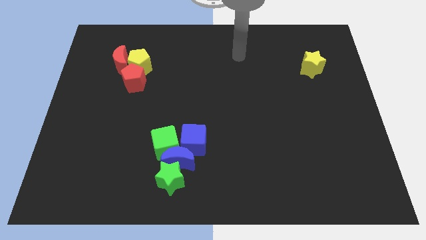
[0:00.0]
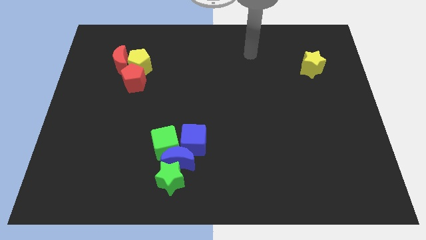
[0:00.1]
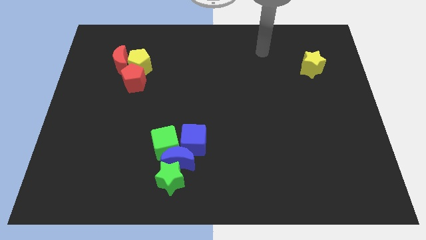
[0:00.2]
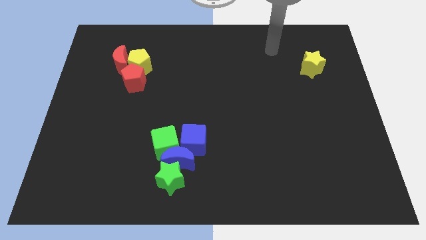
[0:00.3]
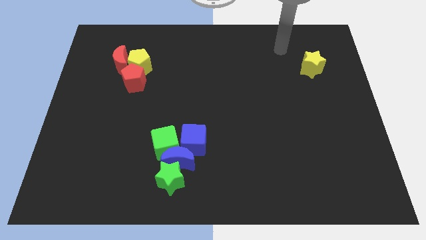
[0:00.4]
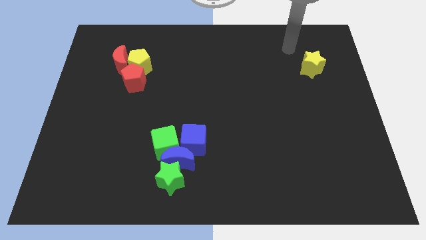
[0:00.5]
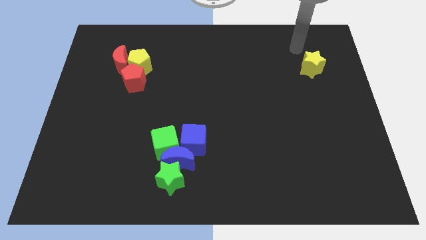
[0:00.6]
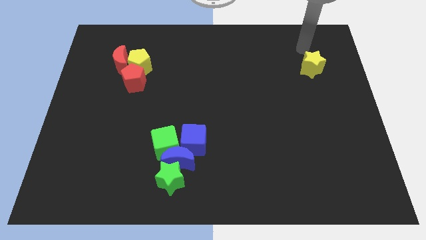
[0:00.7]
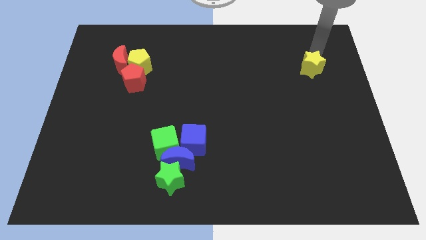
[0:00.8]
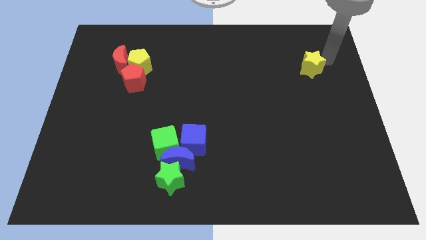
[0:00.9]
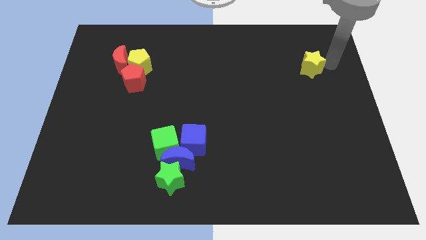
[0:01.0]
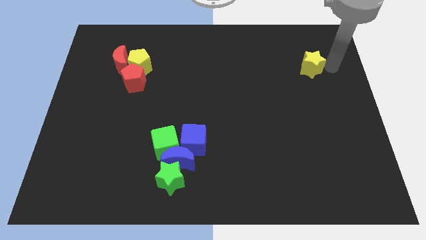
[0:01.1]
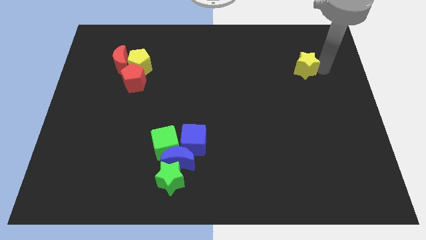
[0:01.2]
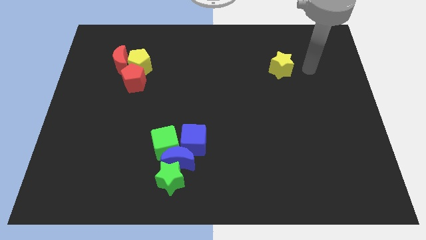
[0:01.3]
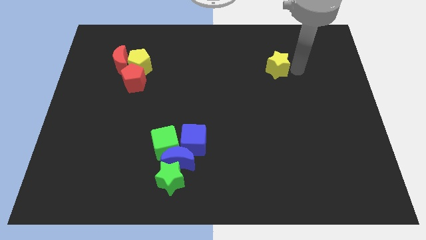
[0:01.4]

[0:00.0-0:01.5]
move yellow star towards the top center of the board

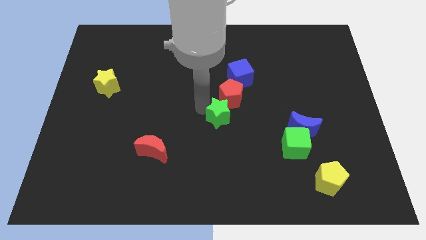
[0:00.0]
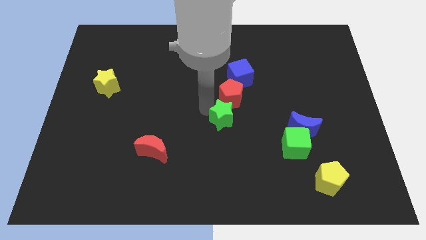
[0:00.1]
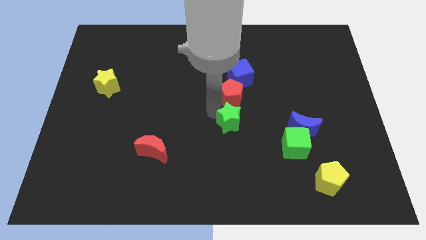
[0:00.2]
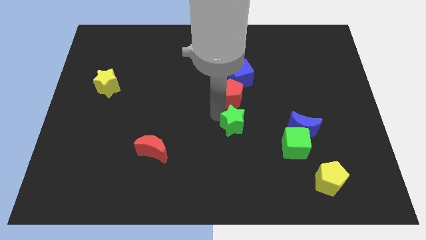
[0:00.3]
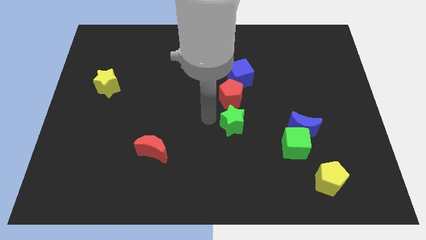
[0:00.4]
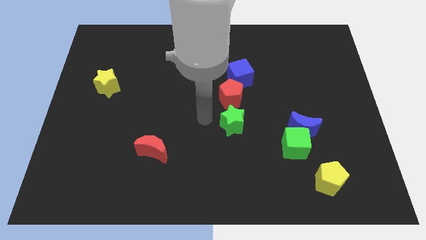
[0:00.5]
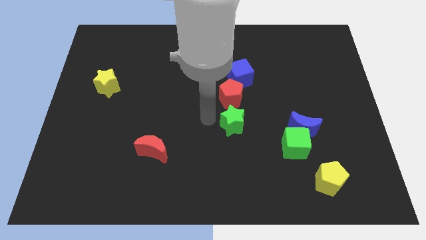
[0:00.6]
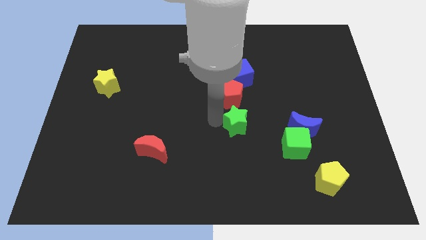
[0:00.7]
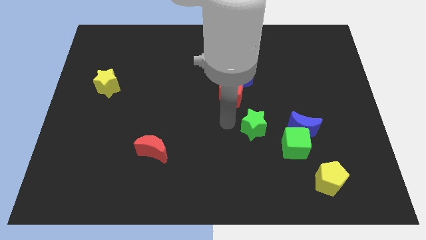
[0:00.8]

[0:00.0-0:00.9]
move the green star to the bottom right of the red pentagon

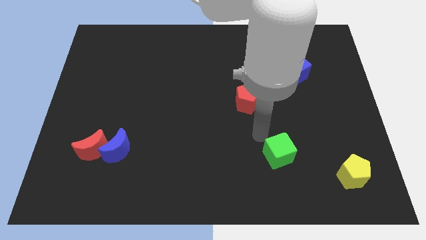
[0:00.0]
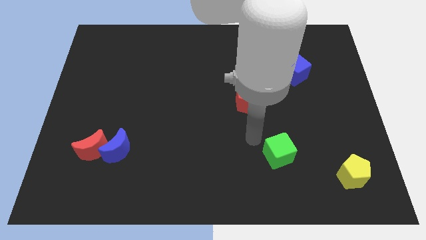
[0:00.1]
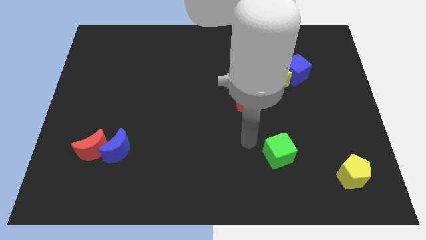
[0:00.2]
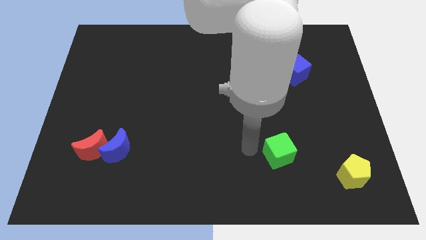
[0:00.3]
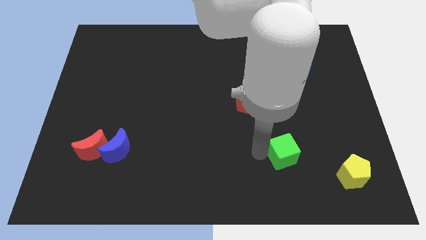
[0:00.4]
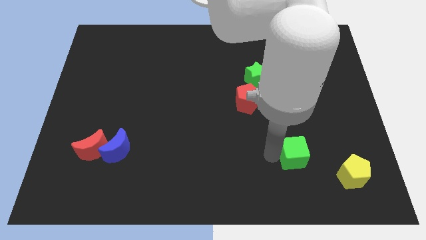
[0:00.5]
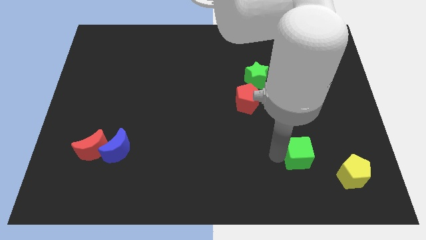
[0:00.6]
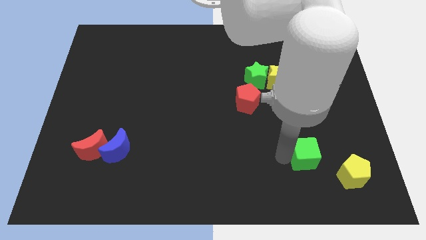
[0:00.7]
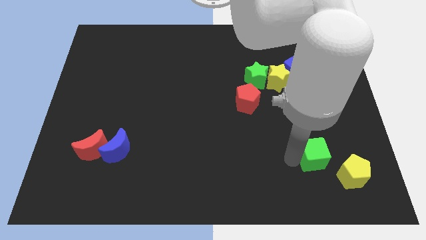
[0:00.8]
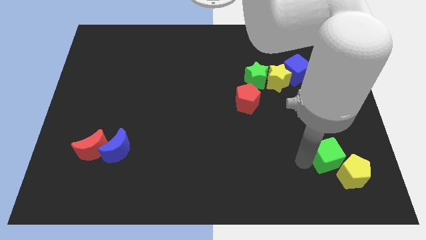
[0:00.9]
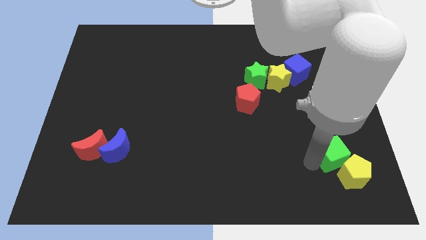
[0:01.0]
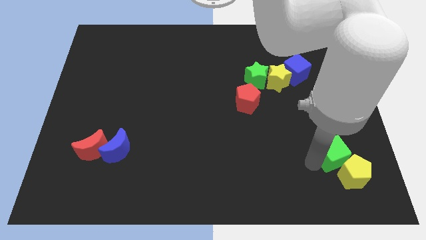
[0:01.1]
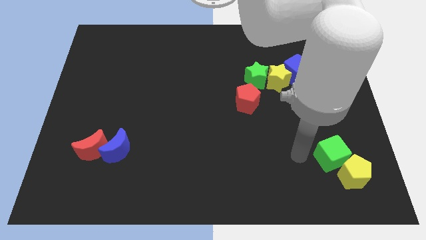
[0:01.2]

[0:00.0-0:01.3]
push the green cube close to yellow pentagon

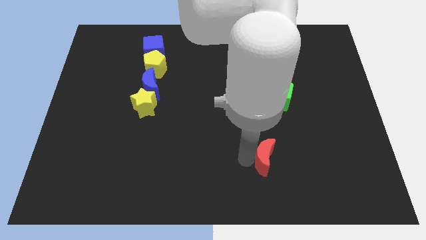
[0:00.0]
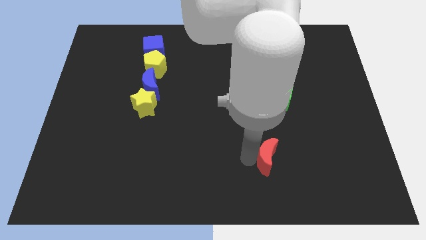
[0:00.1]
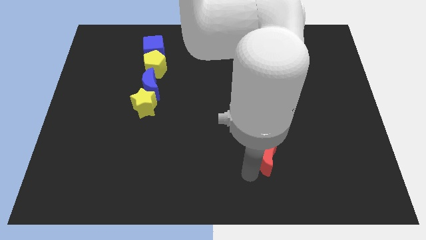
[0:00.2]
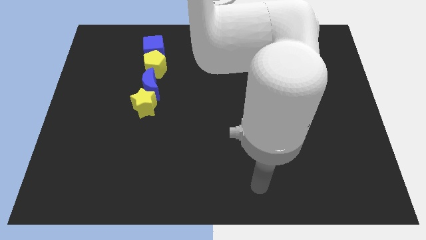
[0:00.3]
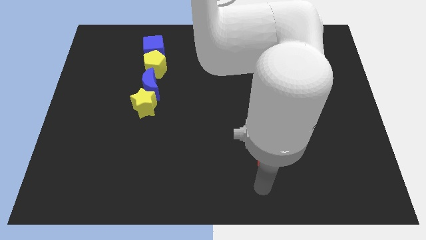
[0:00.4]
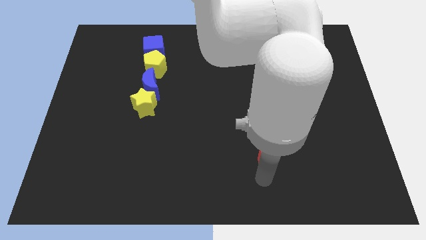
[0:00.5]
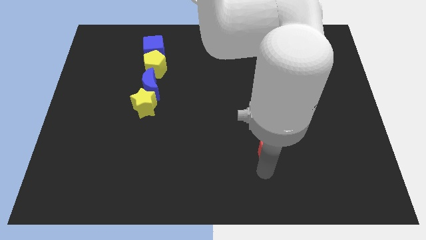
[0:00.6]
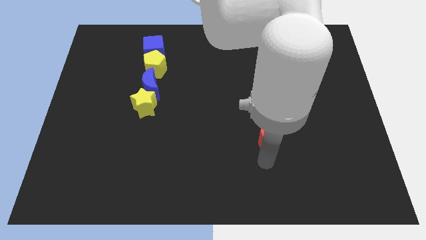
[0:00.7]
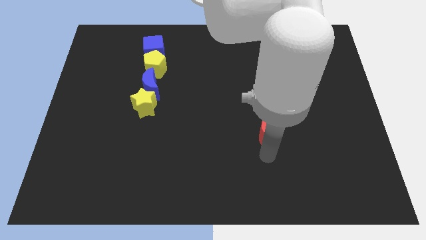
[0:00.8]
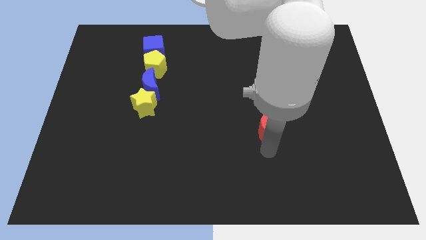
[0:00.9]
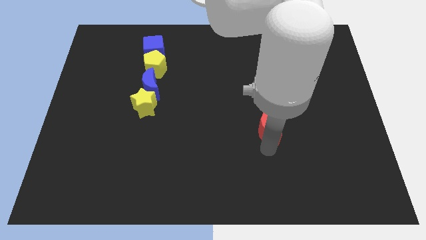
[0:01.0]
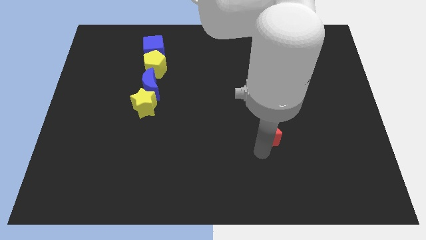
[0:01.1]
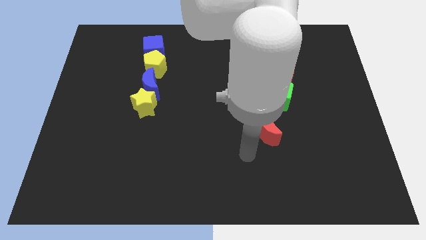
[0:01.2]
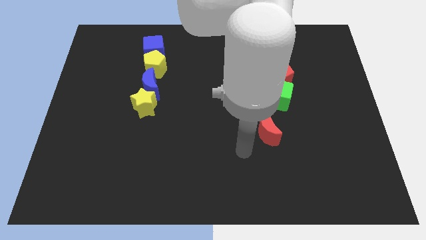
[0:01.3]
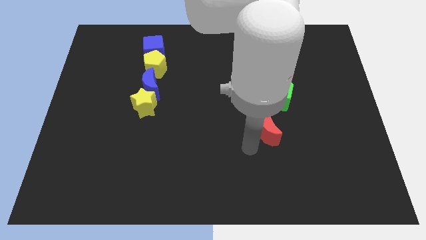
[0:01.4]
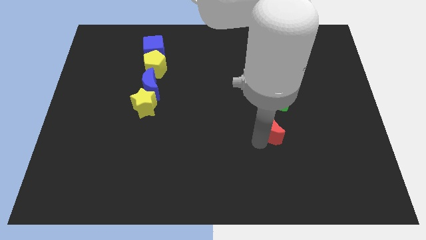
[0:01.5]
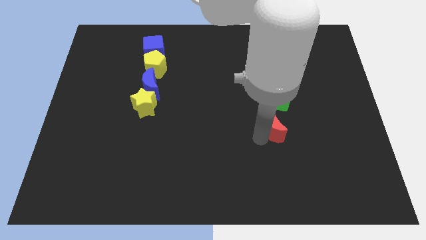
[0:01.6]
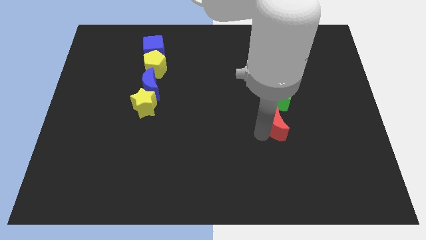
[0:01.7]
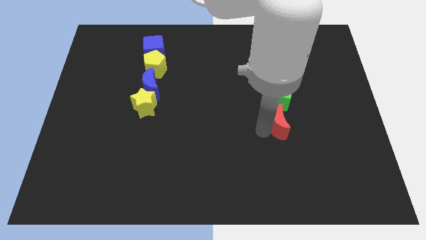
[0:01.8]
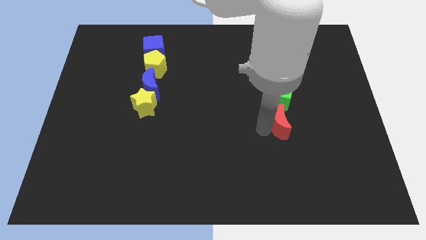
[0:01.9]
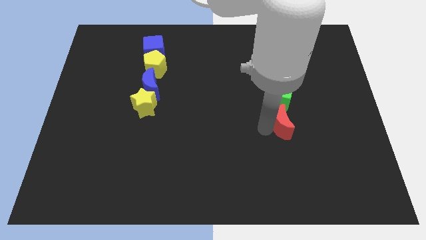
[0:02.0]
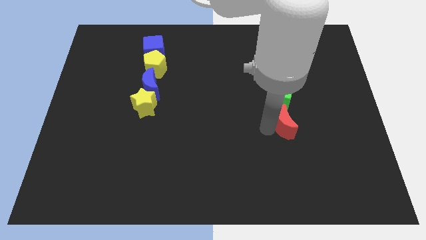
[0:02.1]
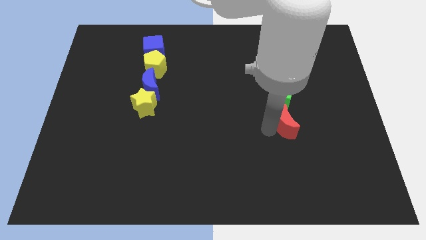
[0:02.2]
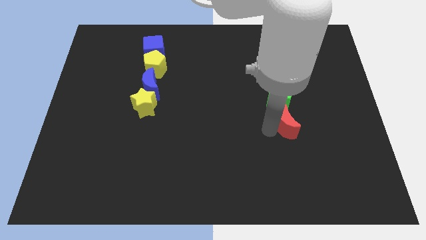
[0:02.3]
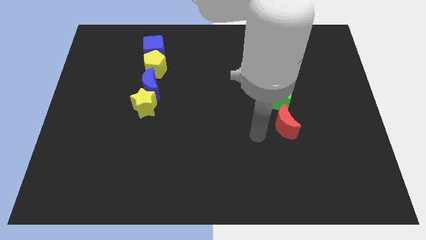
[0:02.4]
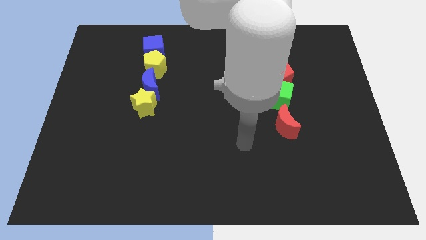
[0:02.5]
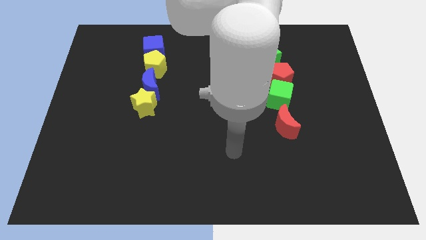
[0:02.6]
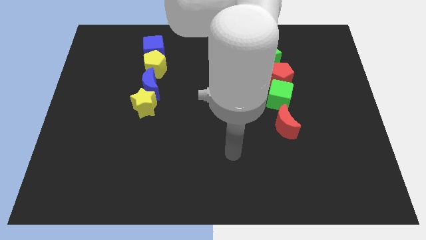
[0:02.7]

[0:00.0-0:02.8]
push the red crescent below the green cube

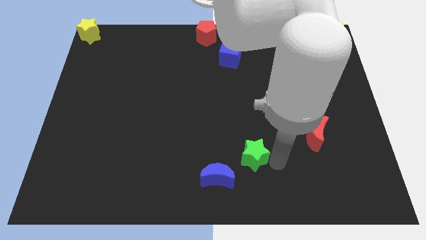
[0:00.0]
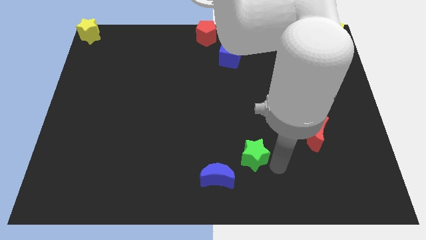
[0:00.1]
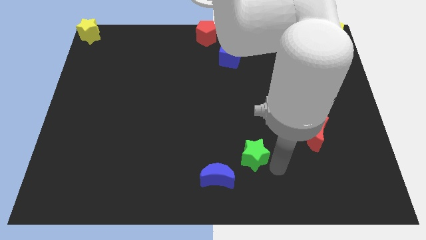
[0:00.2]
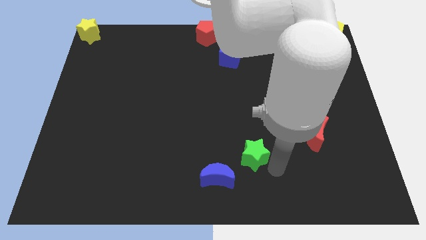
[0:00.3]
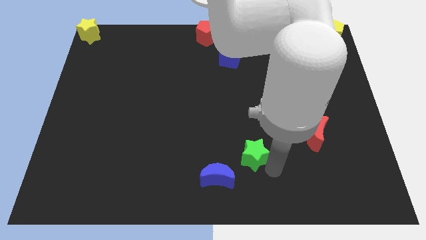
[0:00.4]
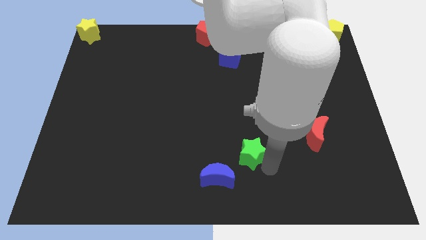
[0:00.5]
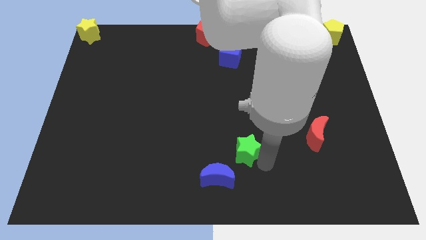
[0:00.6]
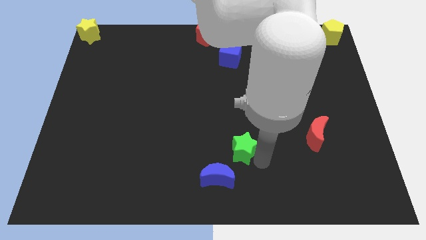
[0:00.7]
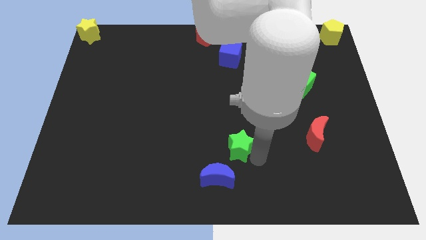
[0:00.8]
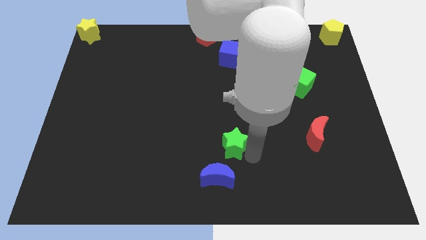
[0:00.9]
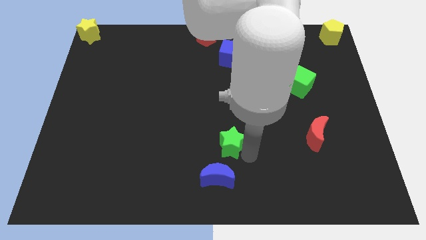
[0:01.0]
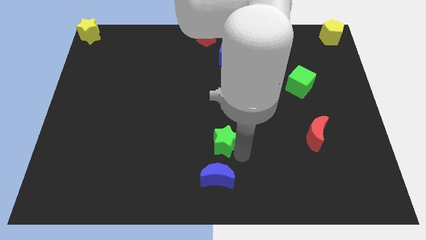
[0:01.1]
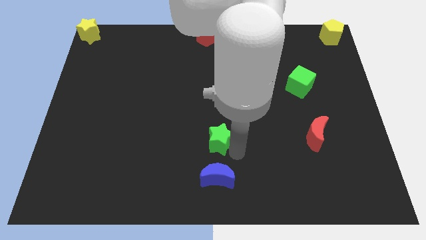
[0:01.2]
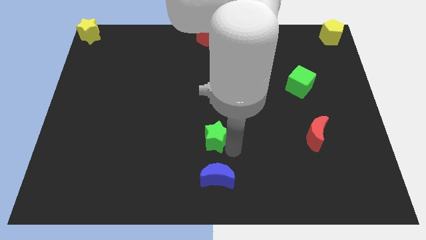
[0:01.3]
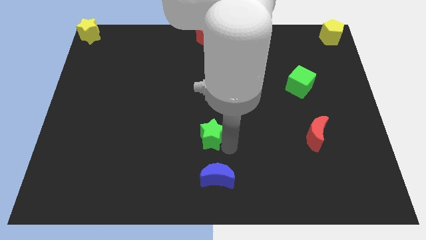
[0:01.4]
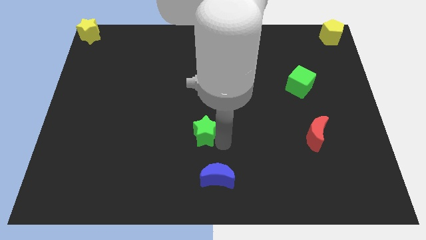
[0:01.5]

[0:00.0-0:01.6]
push the green star towards the left side of the board

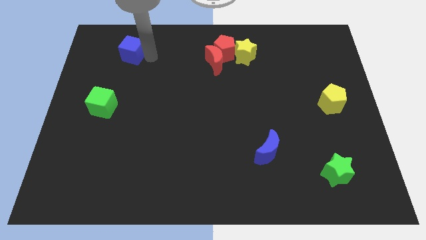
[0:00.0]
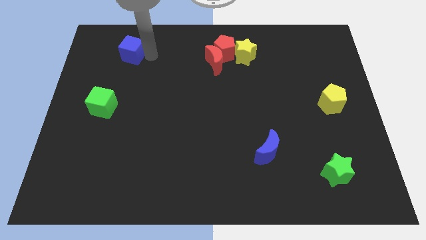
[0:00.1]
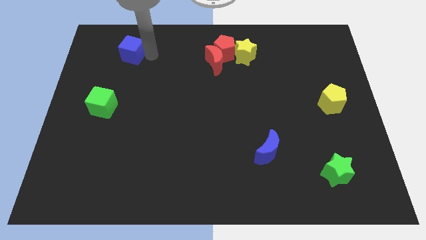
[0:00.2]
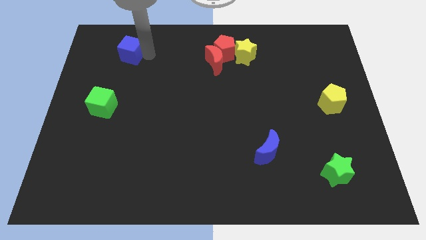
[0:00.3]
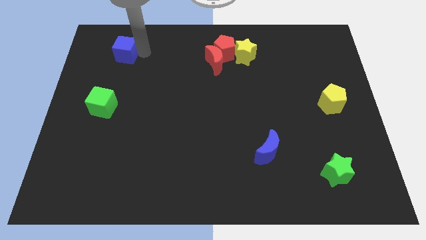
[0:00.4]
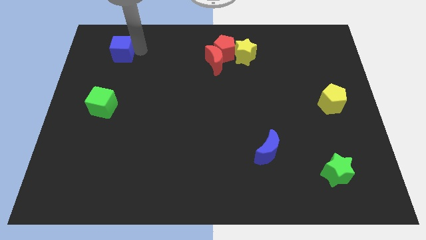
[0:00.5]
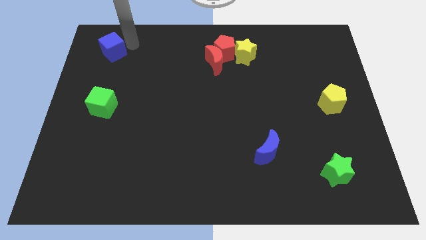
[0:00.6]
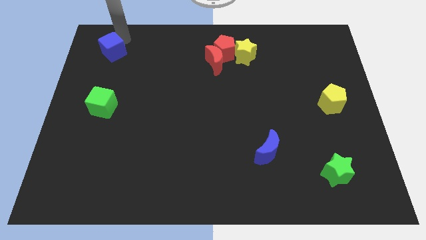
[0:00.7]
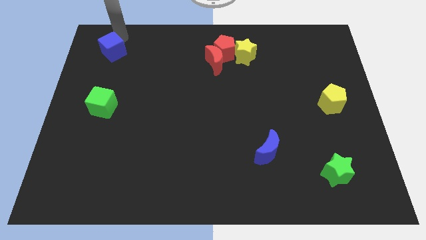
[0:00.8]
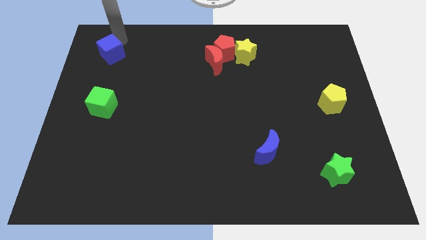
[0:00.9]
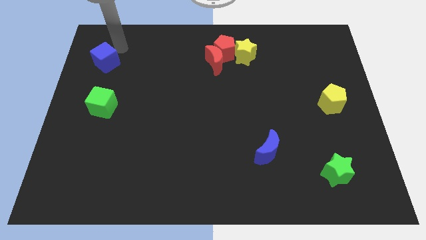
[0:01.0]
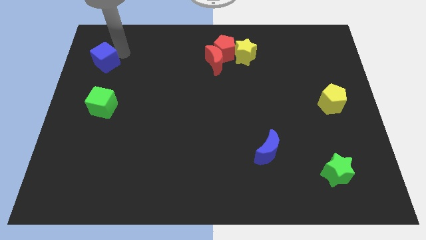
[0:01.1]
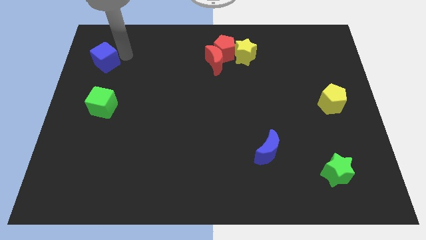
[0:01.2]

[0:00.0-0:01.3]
place the blue cube above the green cube
